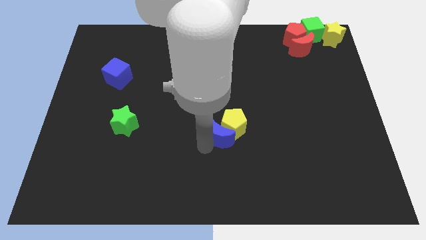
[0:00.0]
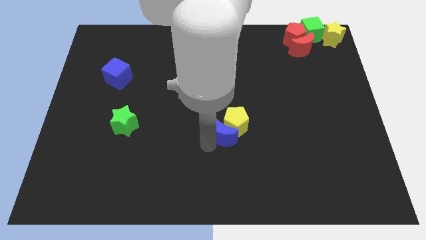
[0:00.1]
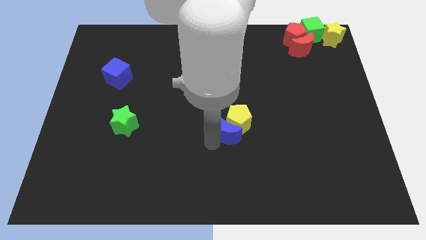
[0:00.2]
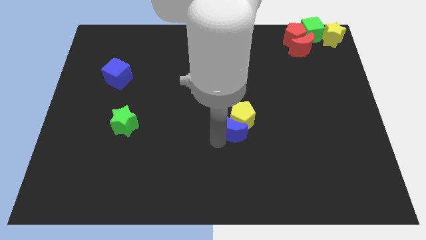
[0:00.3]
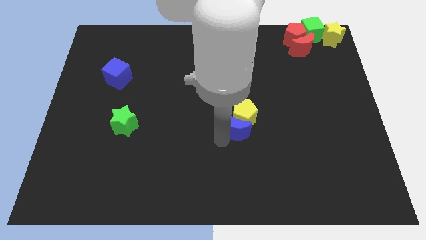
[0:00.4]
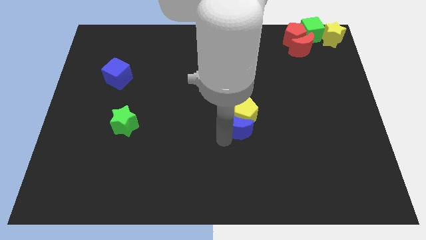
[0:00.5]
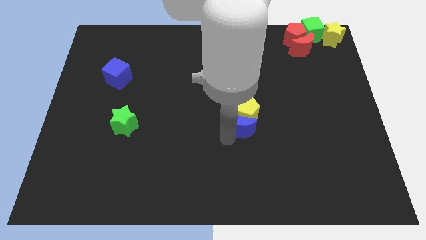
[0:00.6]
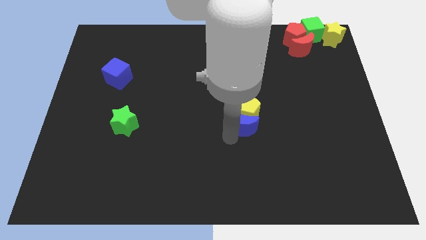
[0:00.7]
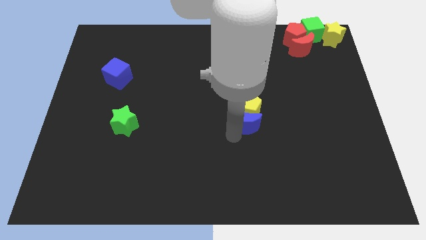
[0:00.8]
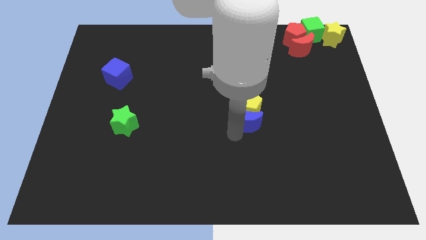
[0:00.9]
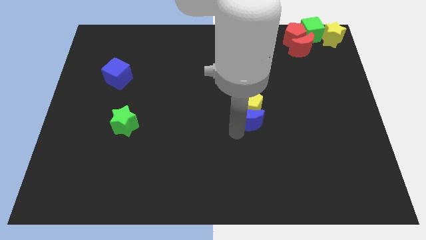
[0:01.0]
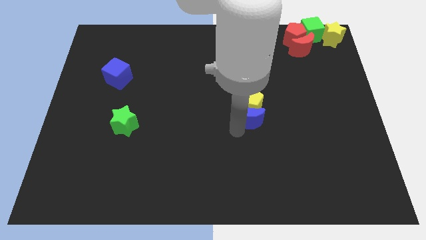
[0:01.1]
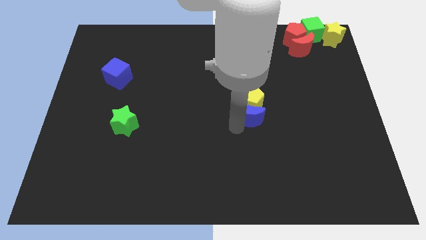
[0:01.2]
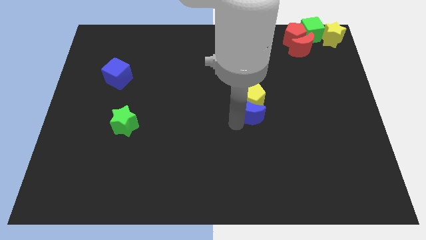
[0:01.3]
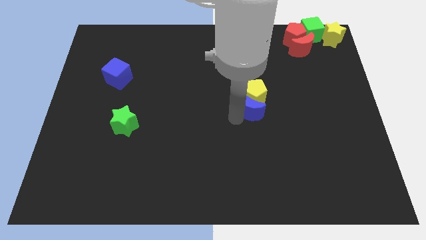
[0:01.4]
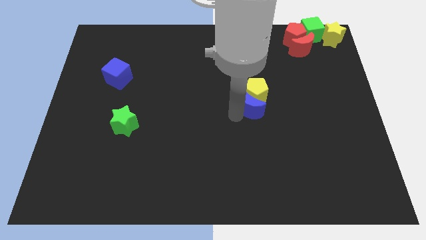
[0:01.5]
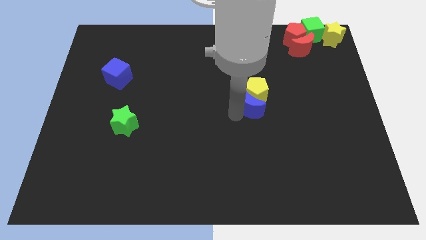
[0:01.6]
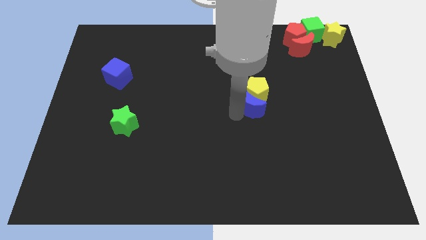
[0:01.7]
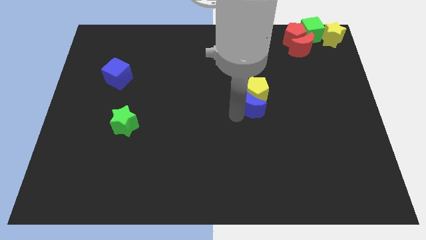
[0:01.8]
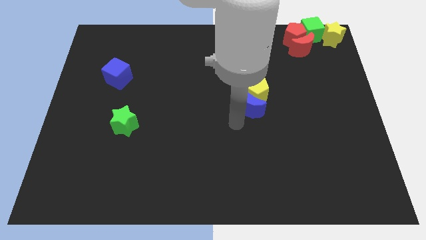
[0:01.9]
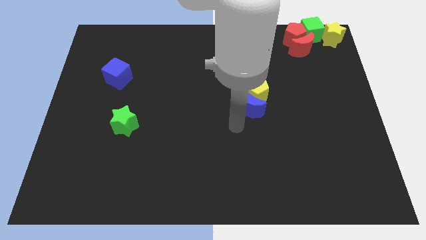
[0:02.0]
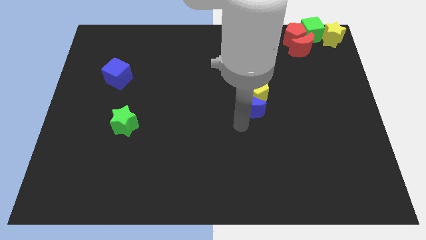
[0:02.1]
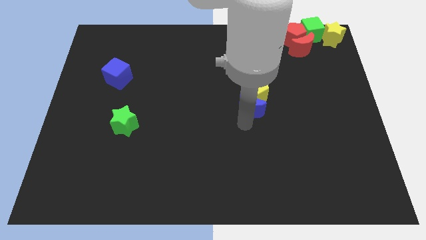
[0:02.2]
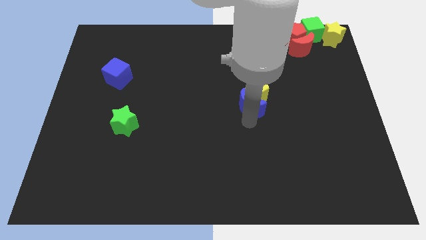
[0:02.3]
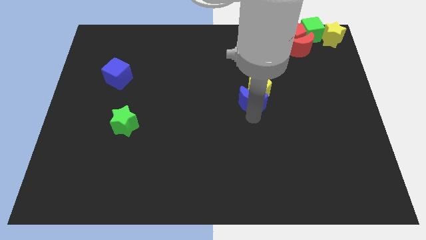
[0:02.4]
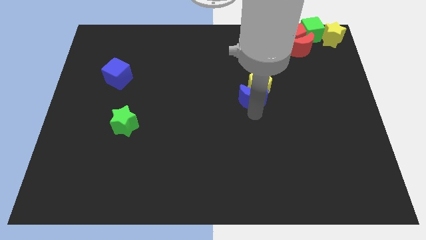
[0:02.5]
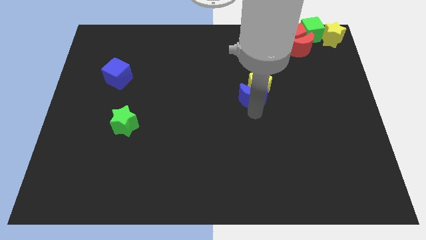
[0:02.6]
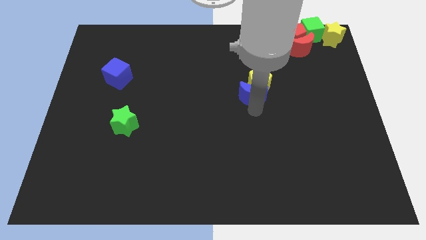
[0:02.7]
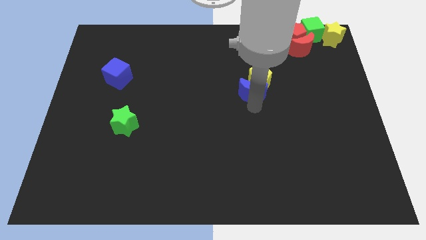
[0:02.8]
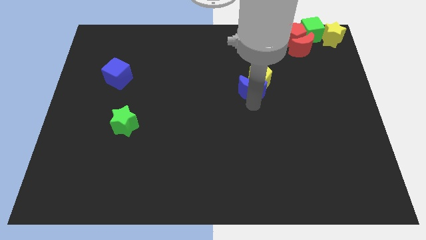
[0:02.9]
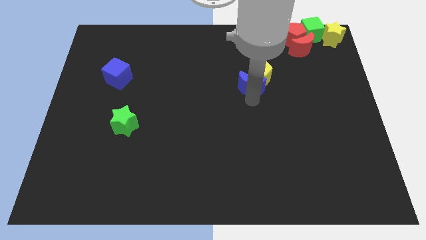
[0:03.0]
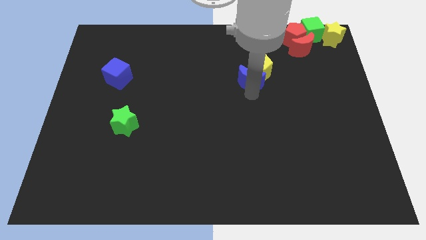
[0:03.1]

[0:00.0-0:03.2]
move the blue moon along with the yellow pentagon towards the red blocks

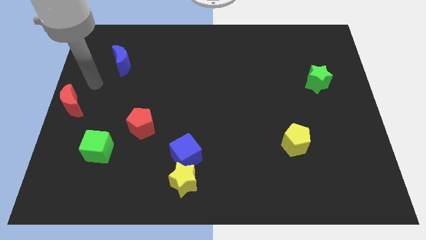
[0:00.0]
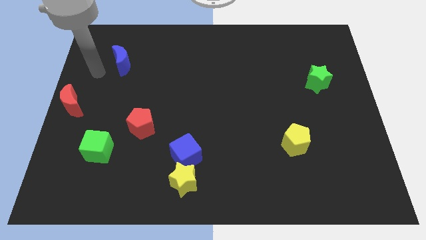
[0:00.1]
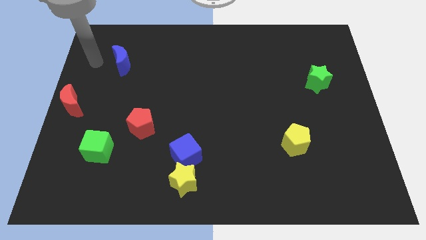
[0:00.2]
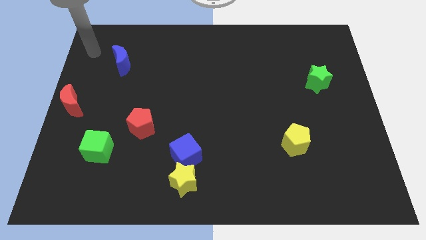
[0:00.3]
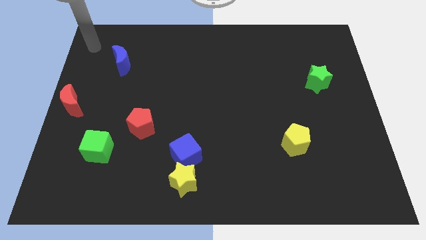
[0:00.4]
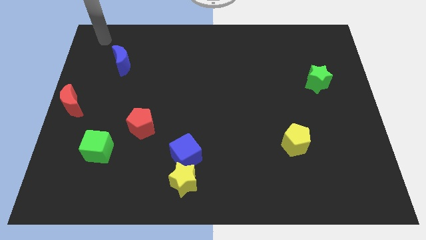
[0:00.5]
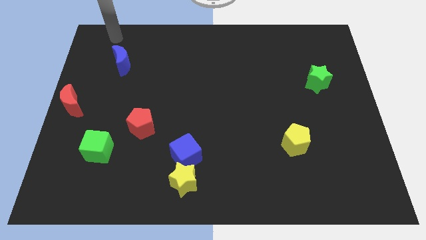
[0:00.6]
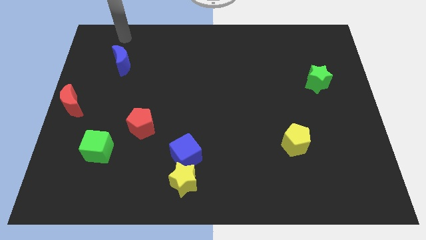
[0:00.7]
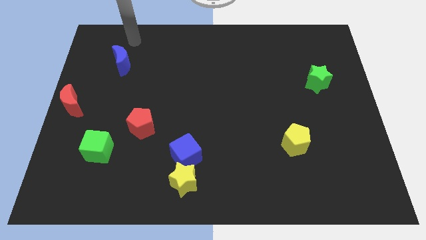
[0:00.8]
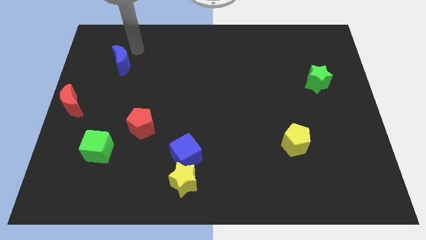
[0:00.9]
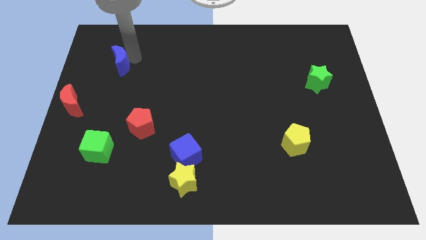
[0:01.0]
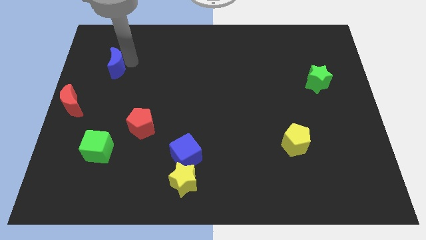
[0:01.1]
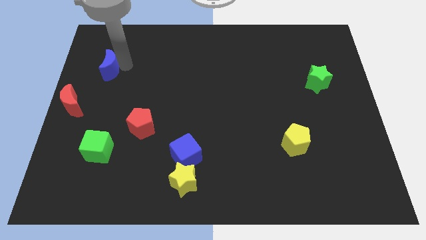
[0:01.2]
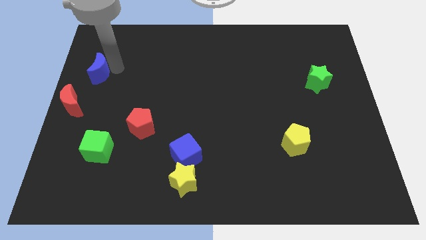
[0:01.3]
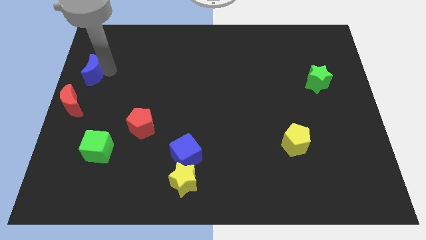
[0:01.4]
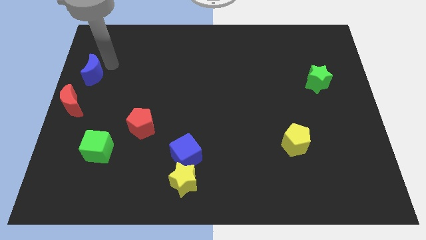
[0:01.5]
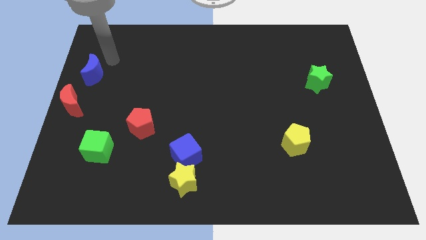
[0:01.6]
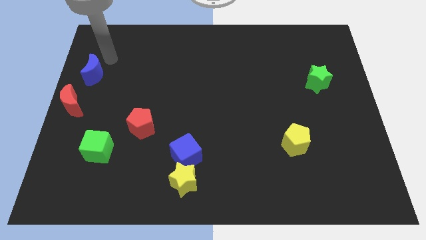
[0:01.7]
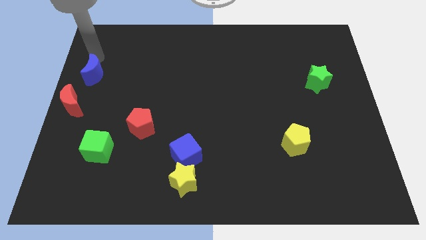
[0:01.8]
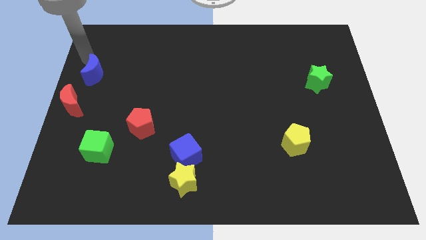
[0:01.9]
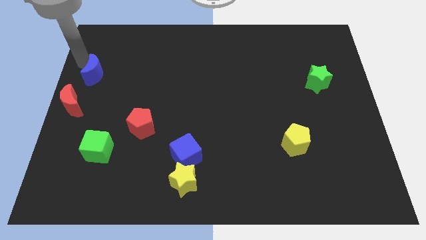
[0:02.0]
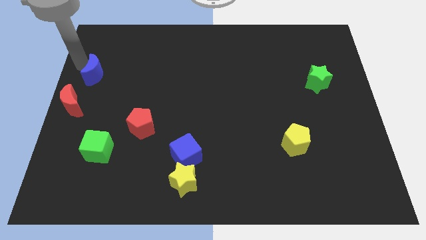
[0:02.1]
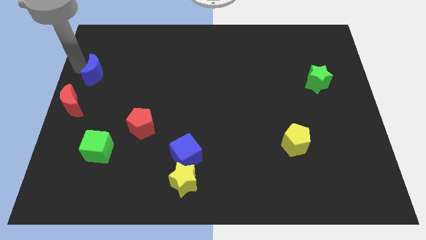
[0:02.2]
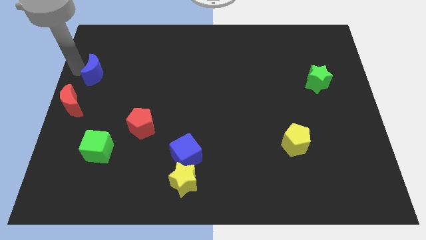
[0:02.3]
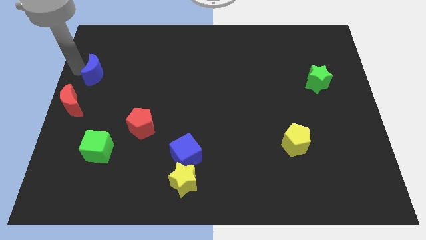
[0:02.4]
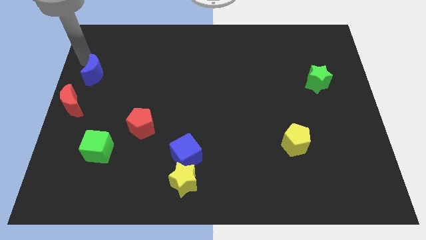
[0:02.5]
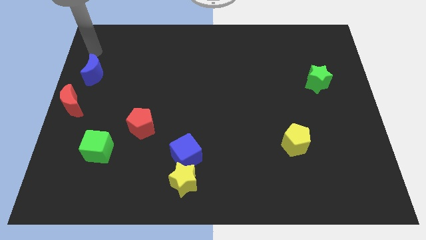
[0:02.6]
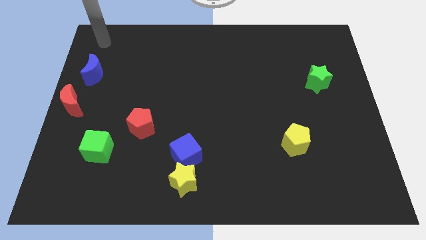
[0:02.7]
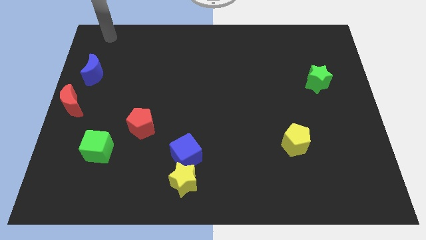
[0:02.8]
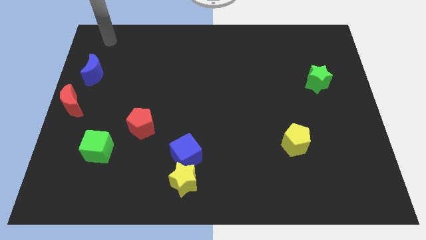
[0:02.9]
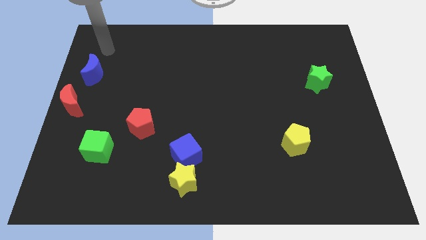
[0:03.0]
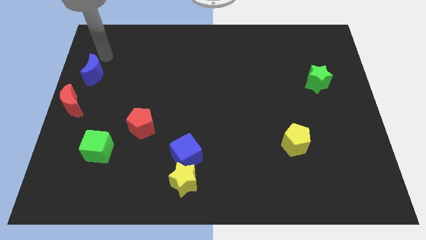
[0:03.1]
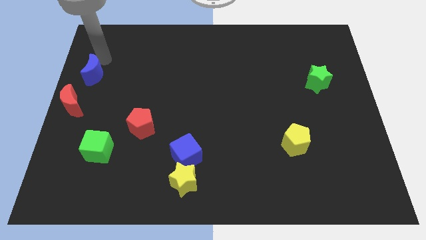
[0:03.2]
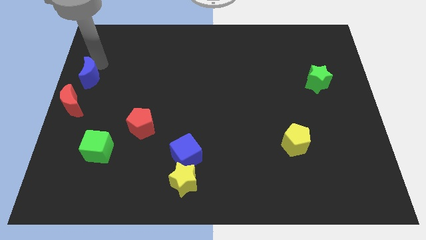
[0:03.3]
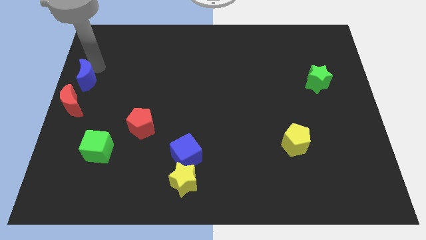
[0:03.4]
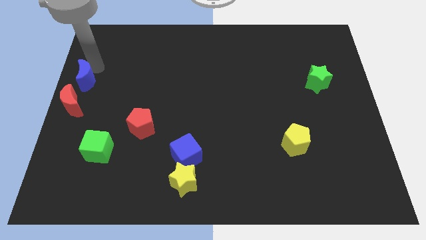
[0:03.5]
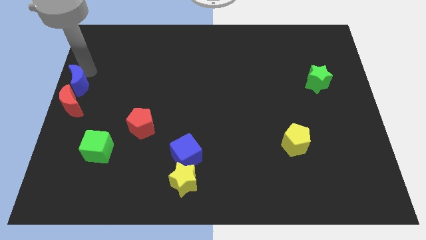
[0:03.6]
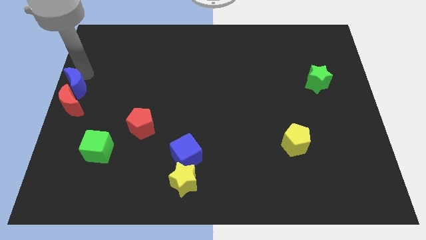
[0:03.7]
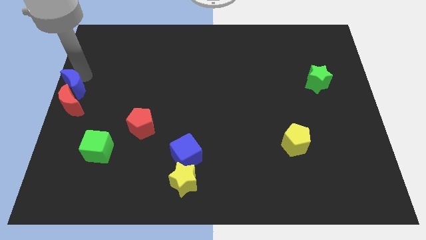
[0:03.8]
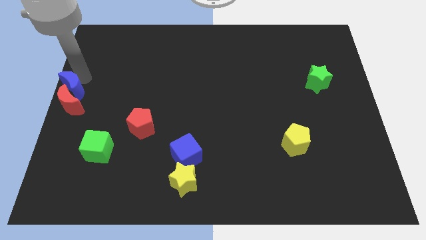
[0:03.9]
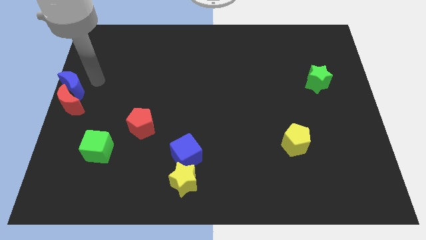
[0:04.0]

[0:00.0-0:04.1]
add blue moon into red moon

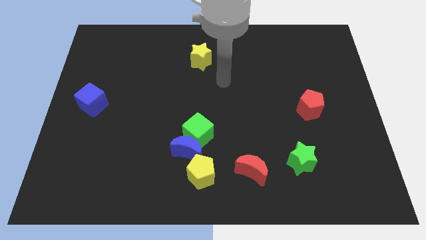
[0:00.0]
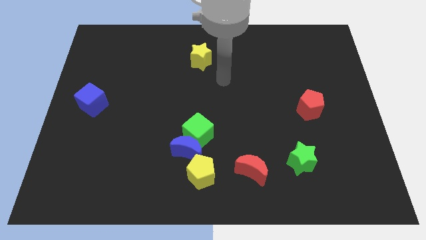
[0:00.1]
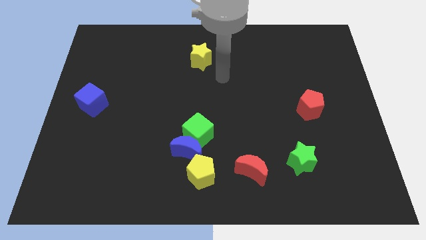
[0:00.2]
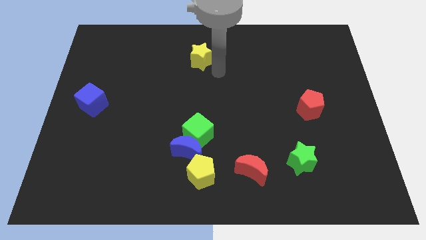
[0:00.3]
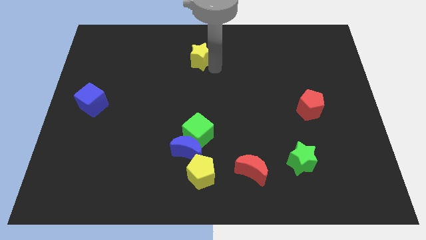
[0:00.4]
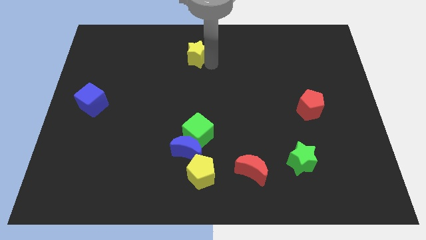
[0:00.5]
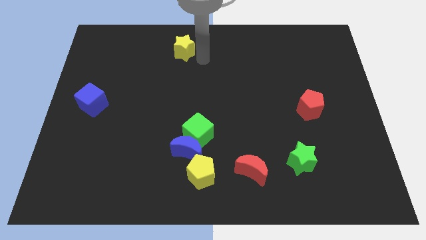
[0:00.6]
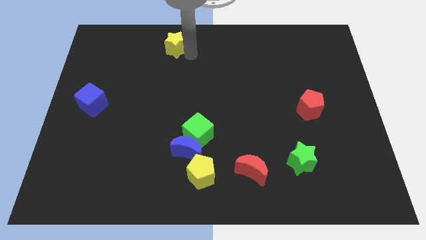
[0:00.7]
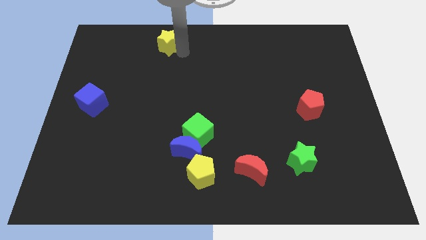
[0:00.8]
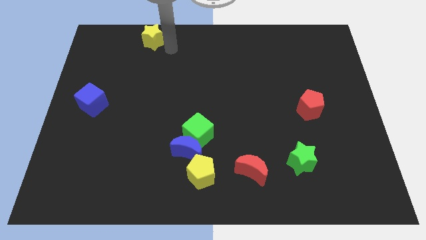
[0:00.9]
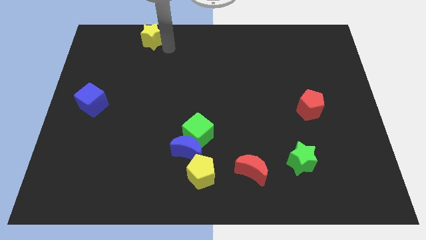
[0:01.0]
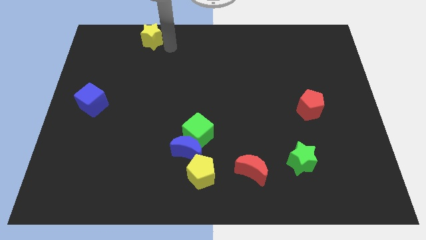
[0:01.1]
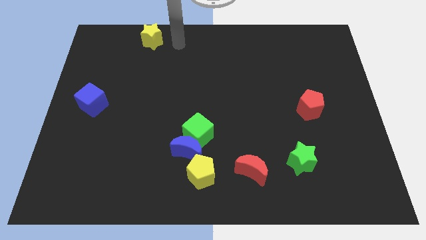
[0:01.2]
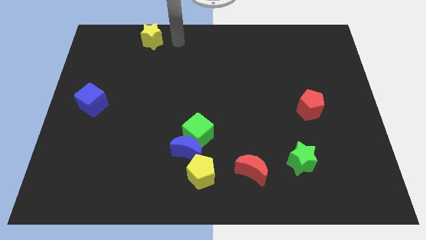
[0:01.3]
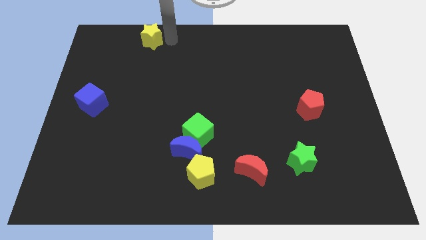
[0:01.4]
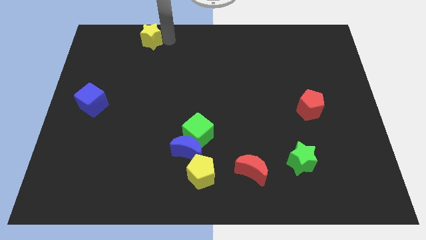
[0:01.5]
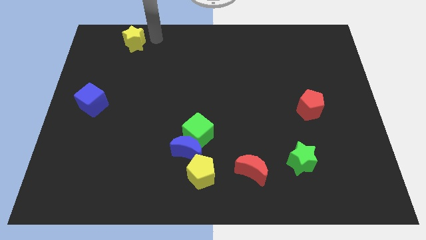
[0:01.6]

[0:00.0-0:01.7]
push yellow star to the top left side
